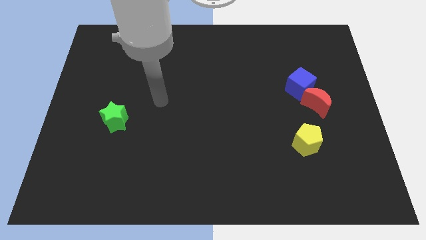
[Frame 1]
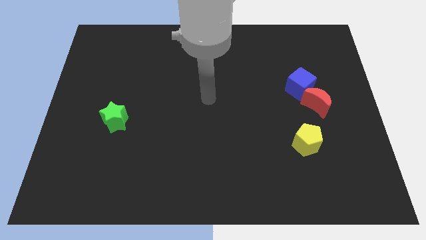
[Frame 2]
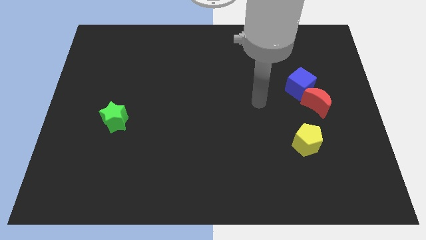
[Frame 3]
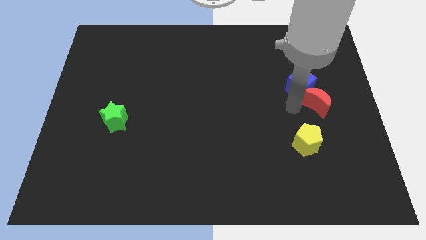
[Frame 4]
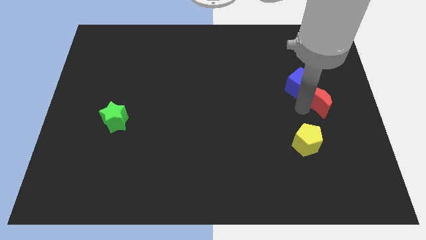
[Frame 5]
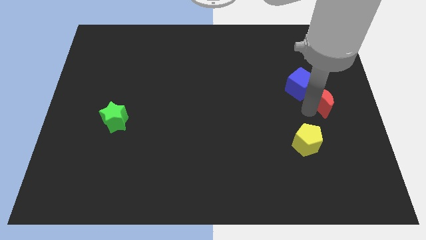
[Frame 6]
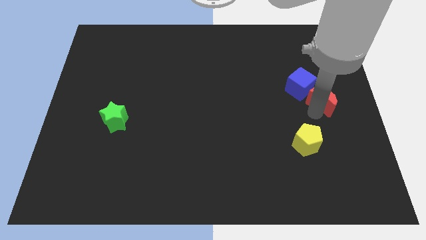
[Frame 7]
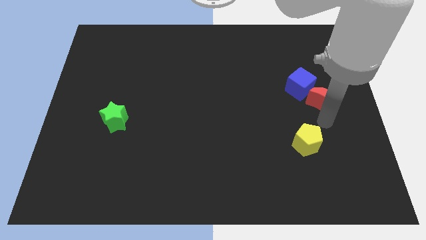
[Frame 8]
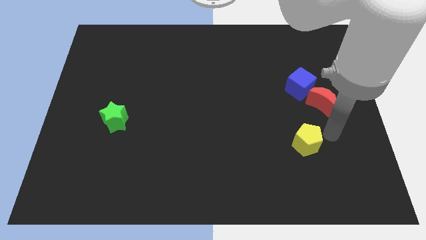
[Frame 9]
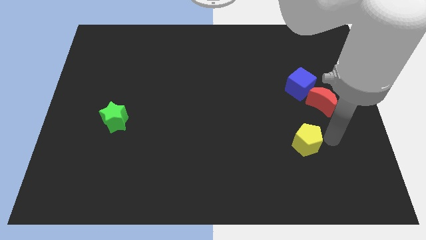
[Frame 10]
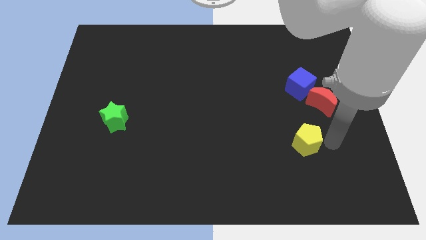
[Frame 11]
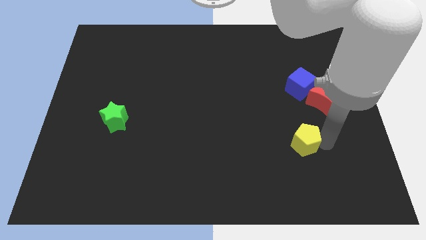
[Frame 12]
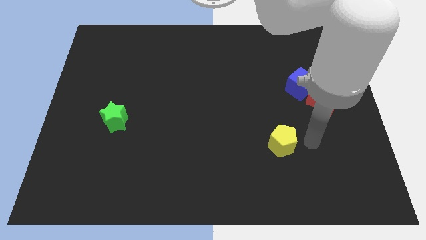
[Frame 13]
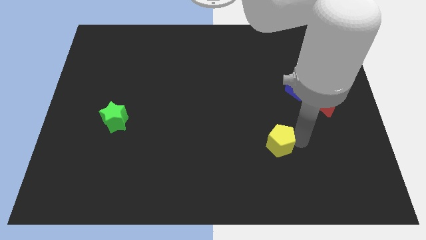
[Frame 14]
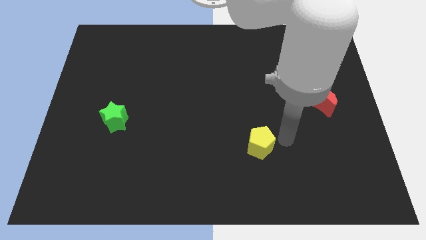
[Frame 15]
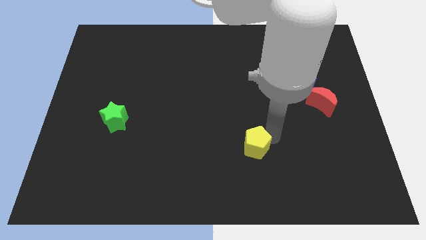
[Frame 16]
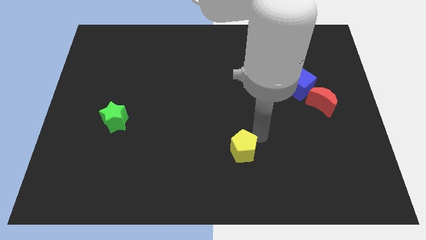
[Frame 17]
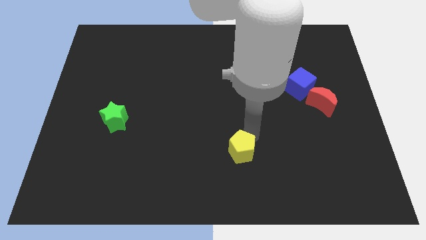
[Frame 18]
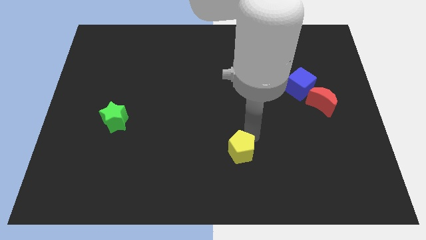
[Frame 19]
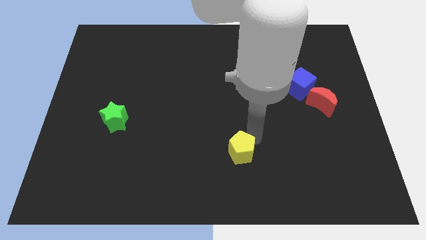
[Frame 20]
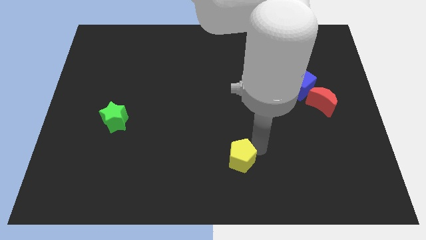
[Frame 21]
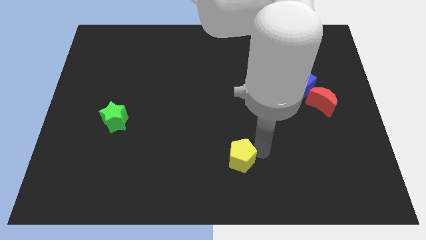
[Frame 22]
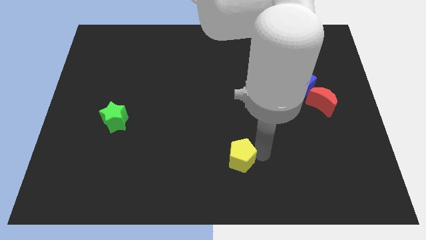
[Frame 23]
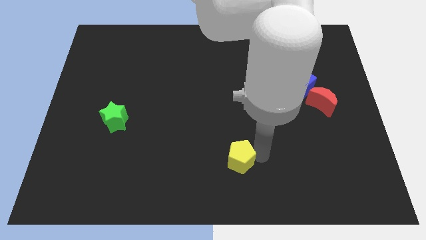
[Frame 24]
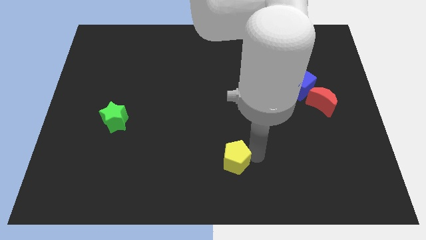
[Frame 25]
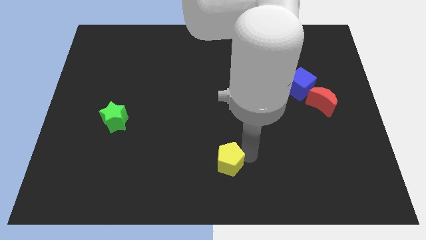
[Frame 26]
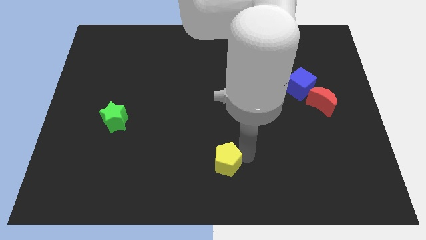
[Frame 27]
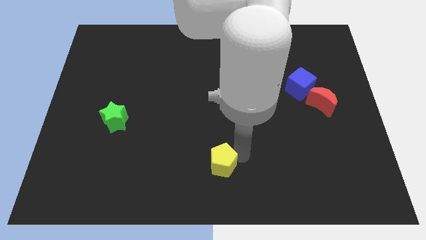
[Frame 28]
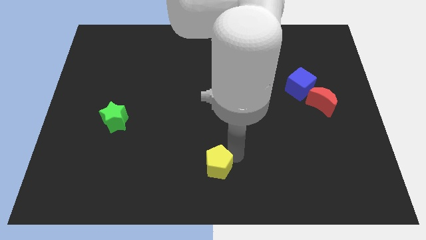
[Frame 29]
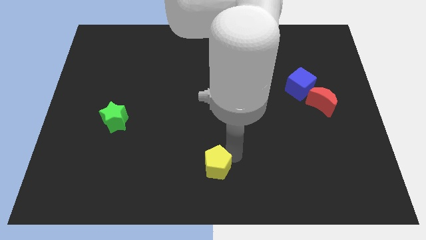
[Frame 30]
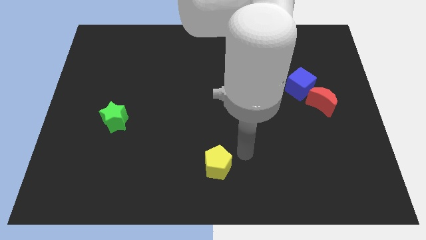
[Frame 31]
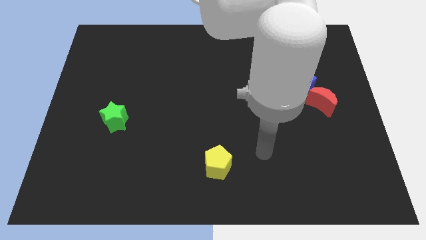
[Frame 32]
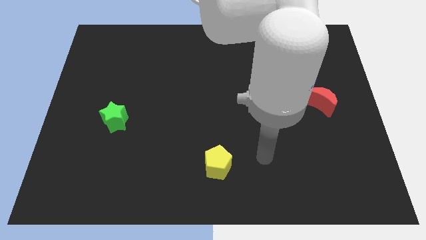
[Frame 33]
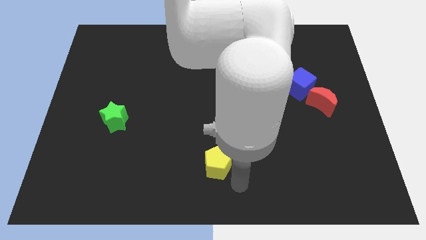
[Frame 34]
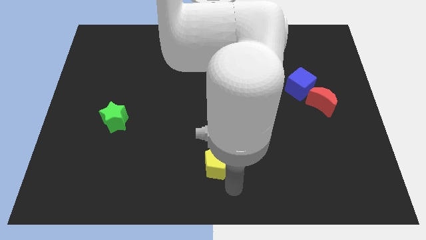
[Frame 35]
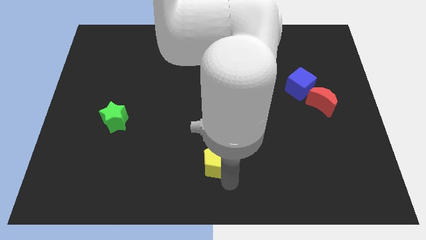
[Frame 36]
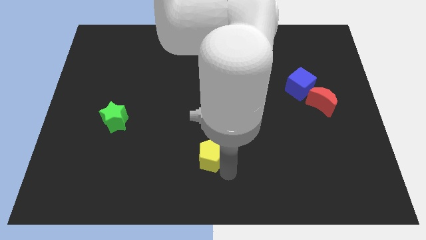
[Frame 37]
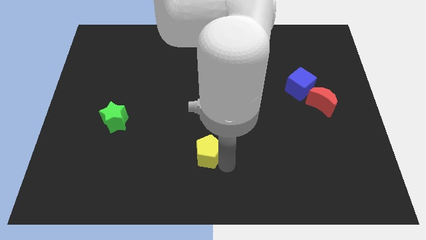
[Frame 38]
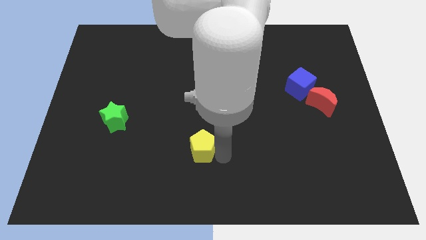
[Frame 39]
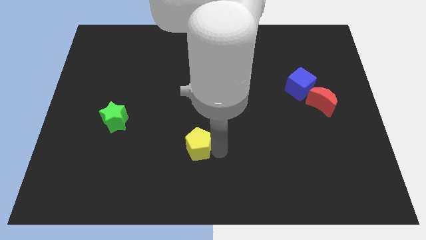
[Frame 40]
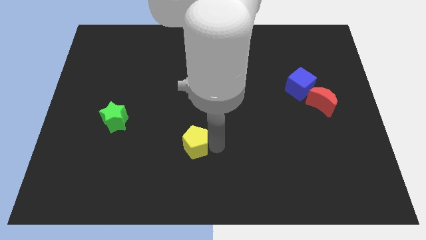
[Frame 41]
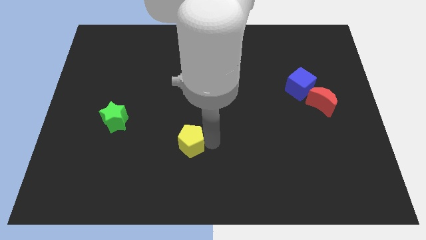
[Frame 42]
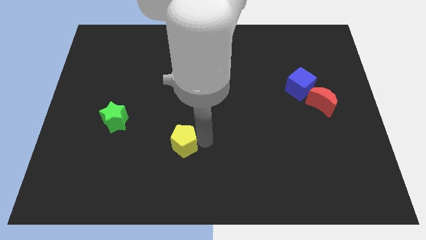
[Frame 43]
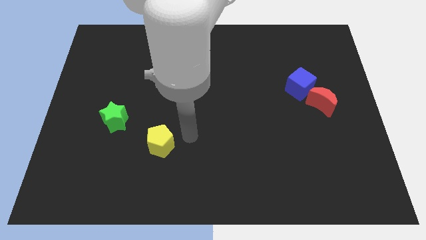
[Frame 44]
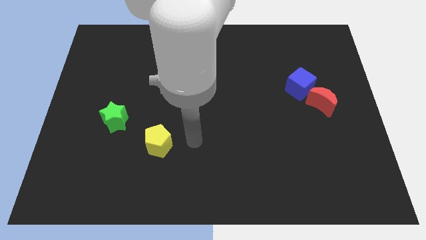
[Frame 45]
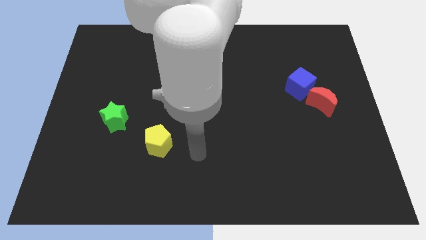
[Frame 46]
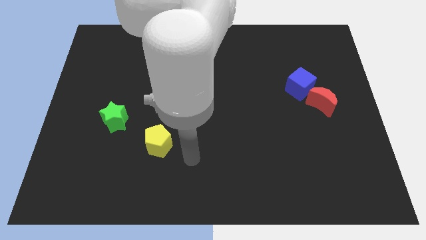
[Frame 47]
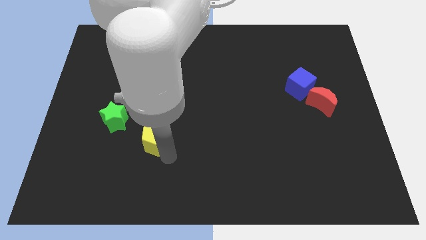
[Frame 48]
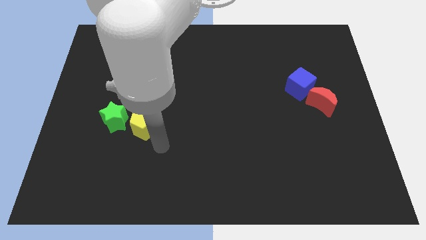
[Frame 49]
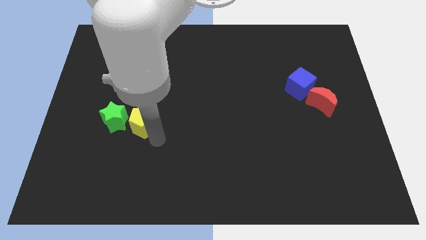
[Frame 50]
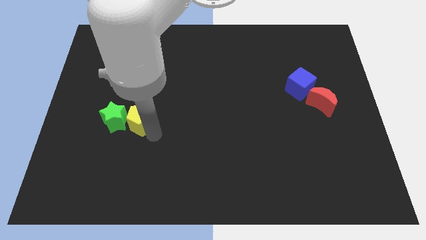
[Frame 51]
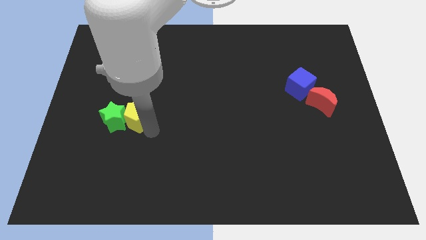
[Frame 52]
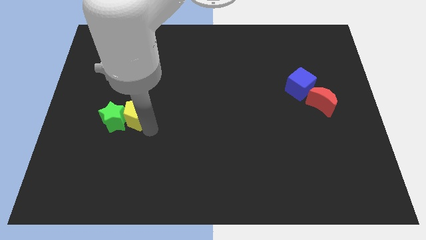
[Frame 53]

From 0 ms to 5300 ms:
put the yellow block to the green block

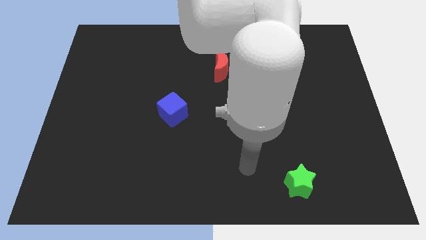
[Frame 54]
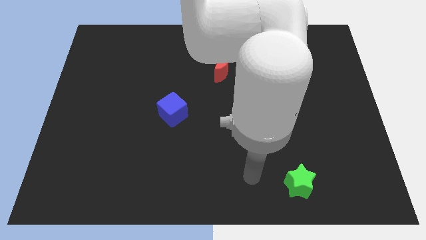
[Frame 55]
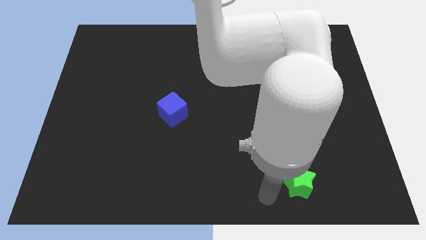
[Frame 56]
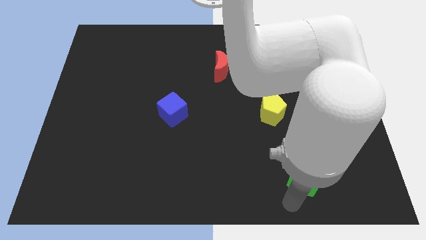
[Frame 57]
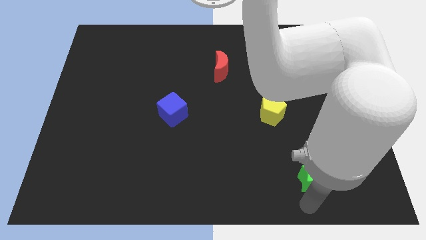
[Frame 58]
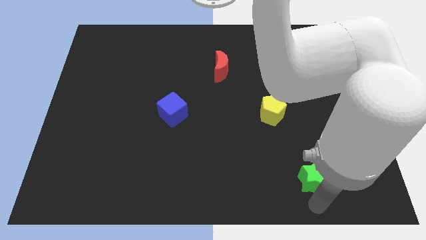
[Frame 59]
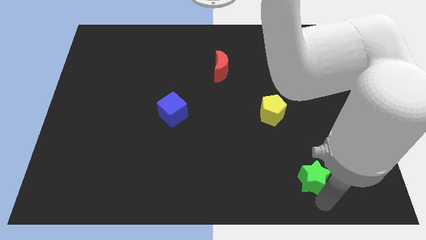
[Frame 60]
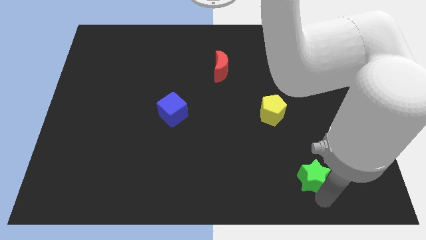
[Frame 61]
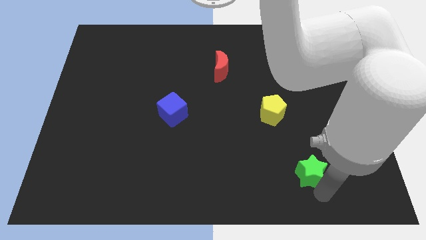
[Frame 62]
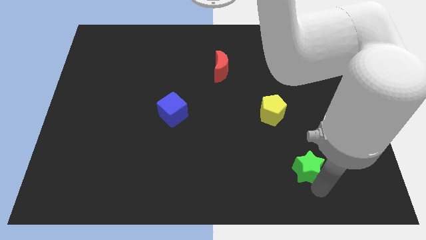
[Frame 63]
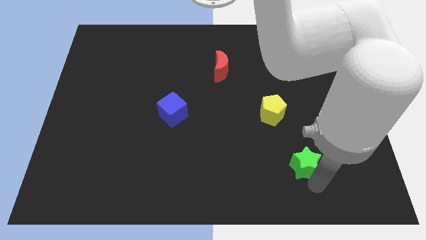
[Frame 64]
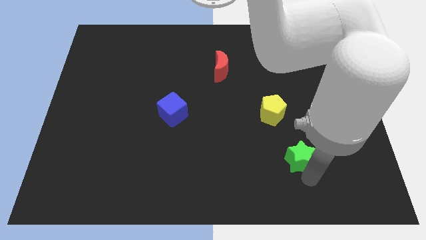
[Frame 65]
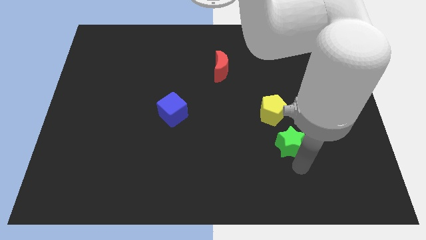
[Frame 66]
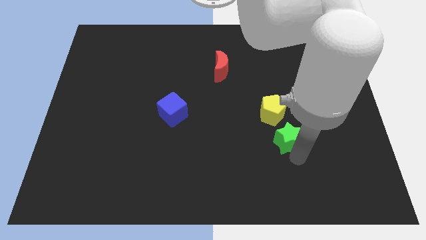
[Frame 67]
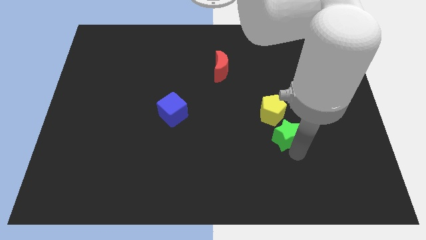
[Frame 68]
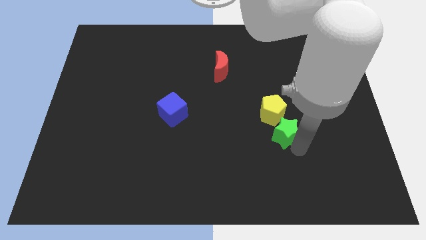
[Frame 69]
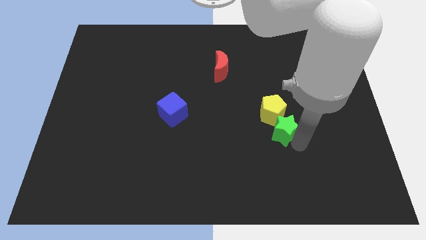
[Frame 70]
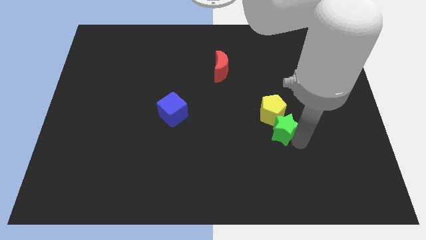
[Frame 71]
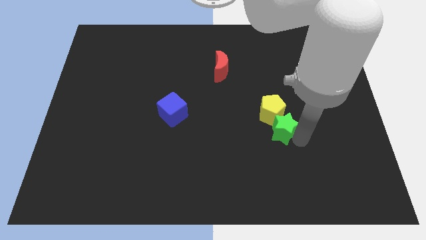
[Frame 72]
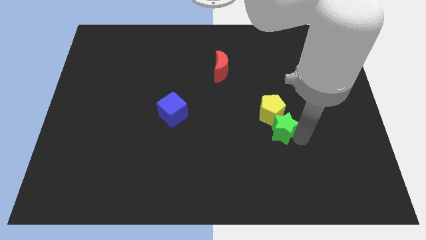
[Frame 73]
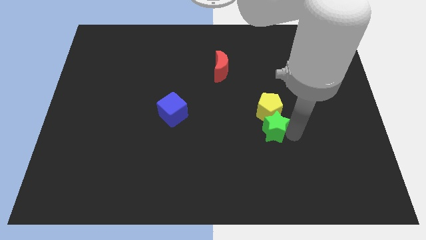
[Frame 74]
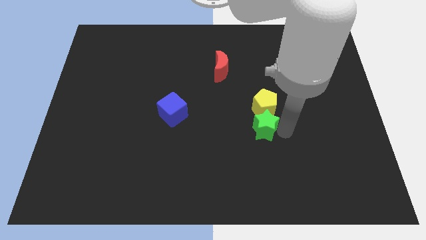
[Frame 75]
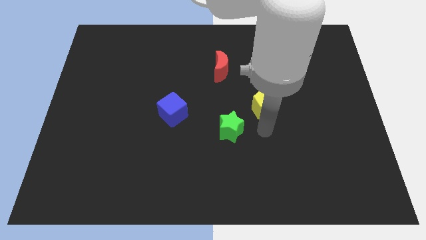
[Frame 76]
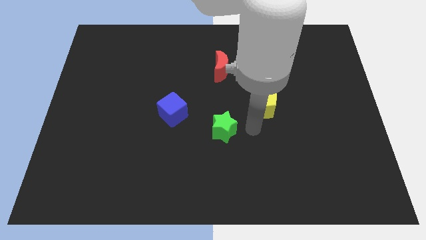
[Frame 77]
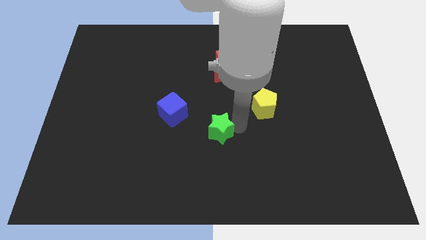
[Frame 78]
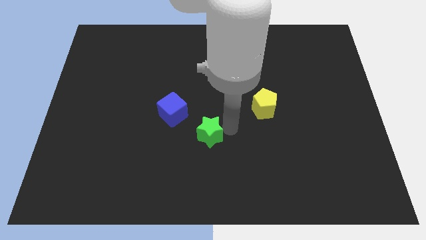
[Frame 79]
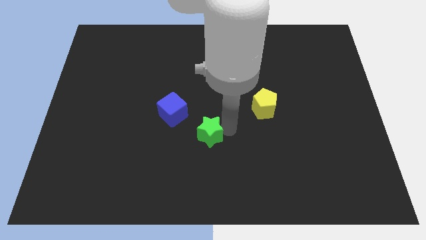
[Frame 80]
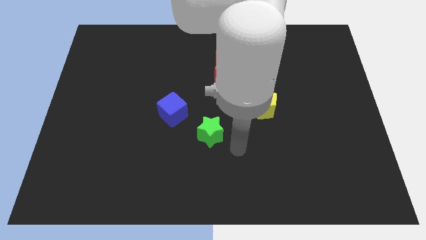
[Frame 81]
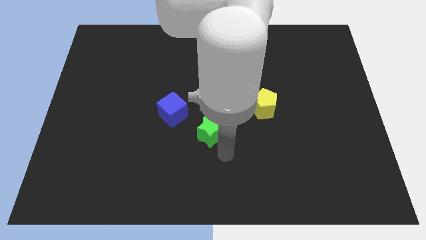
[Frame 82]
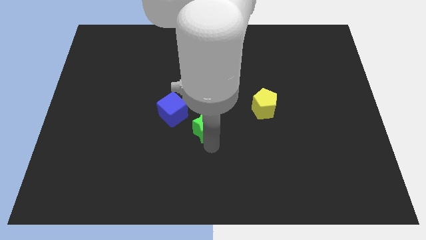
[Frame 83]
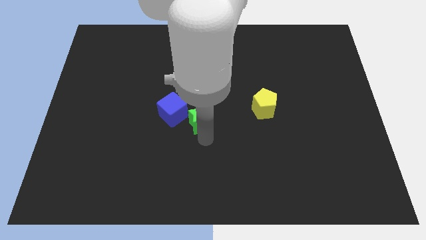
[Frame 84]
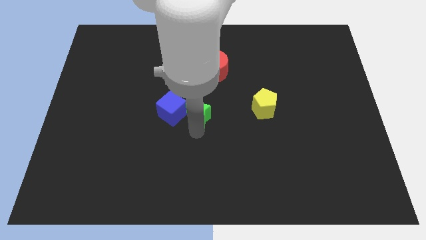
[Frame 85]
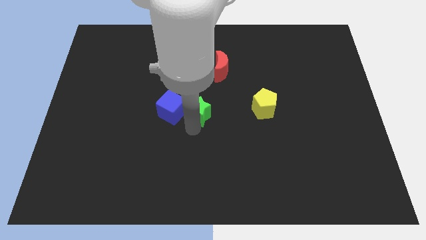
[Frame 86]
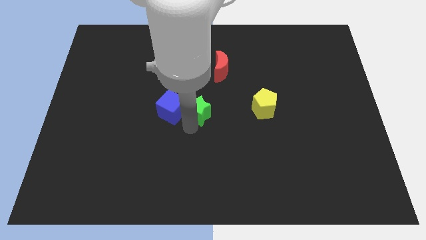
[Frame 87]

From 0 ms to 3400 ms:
slide the green star to the cube

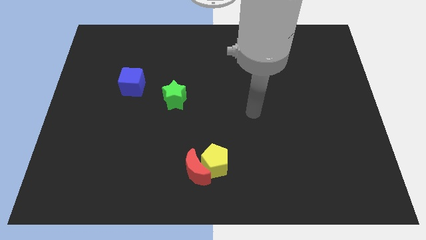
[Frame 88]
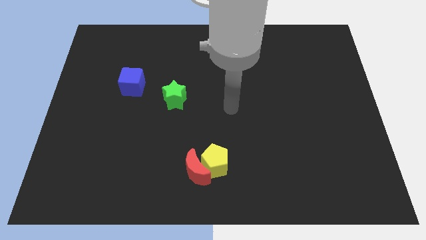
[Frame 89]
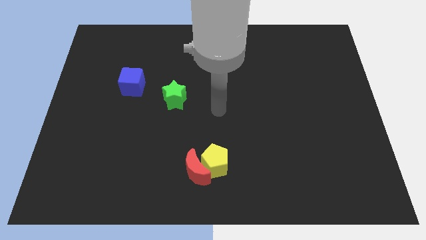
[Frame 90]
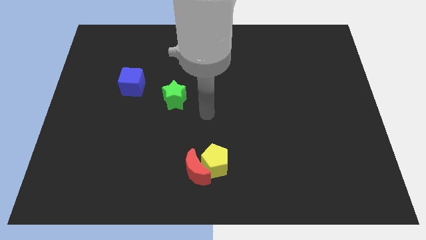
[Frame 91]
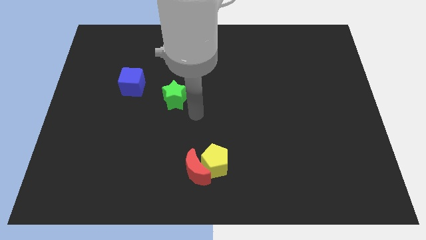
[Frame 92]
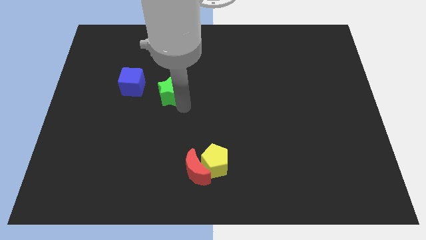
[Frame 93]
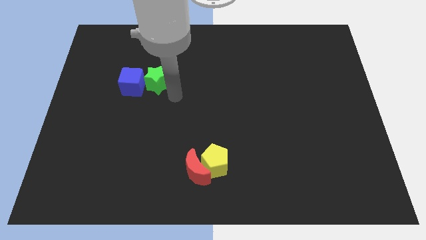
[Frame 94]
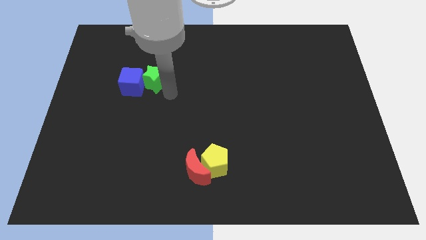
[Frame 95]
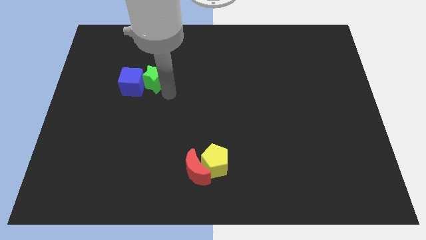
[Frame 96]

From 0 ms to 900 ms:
put the star close to the blue block
